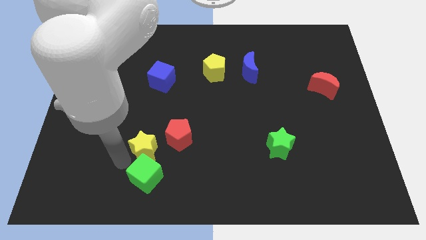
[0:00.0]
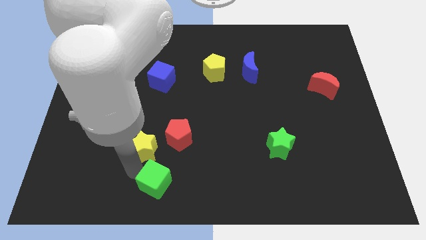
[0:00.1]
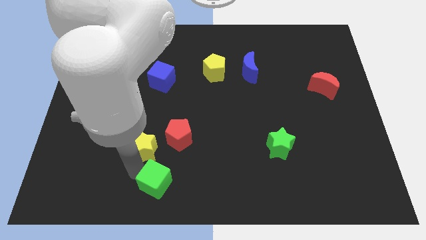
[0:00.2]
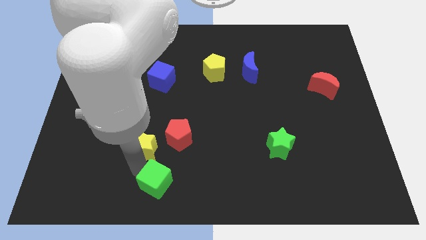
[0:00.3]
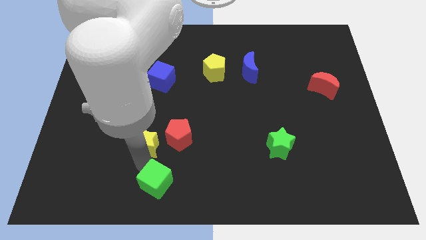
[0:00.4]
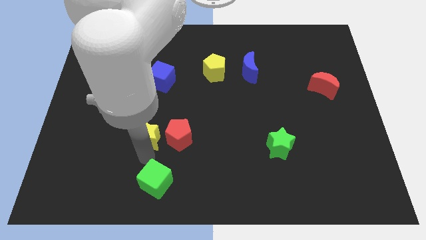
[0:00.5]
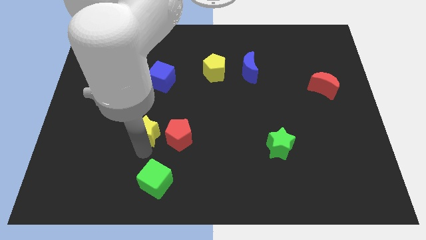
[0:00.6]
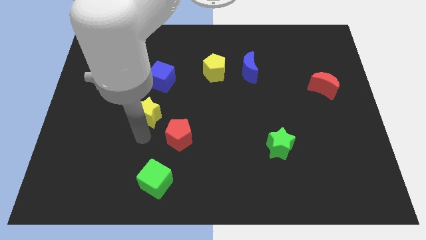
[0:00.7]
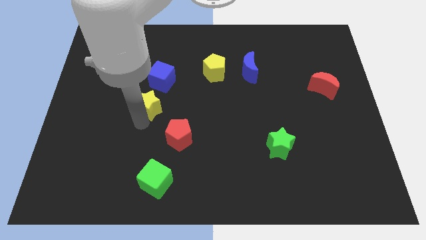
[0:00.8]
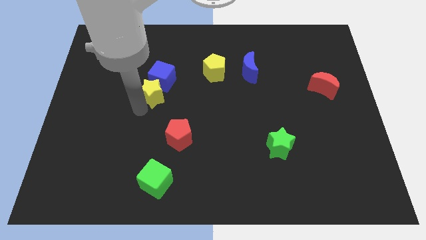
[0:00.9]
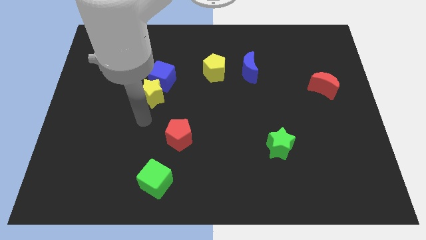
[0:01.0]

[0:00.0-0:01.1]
push the yellow star into the bottom of the blue cube

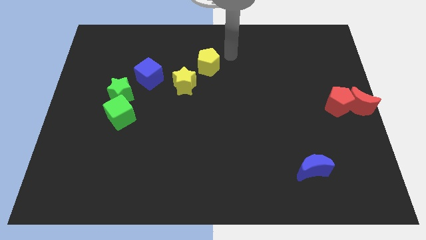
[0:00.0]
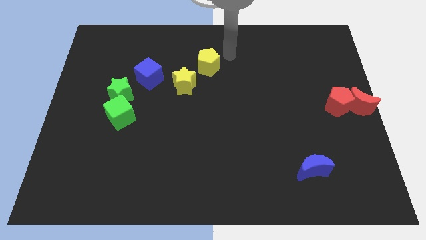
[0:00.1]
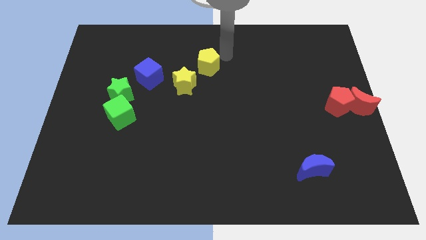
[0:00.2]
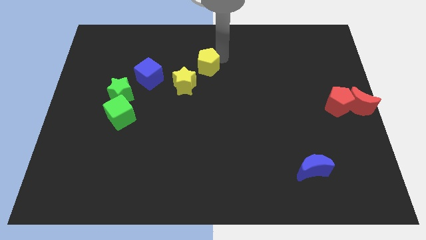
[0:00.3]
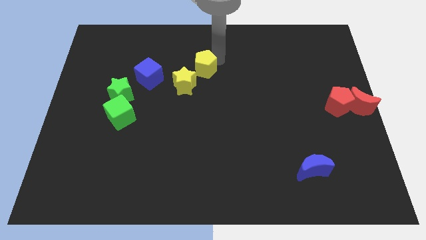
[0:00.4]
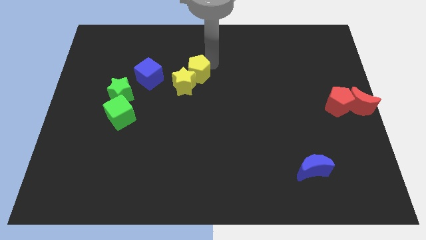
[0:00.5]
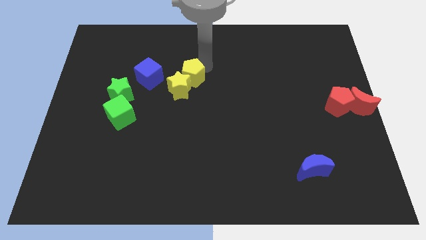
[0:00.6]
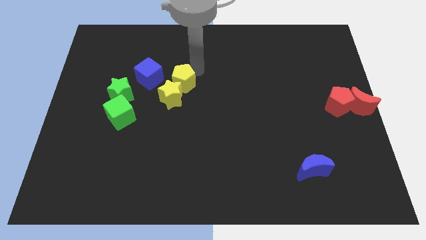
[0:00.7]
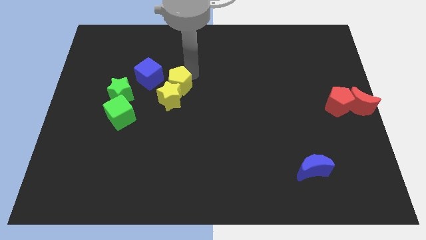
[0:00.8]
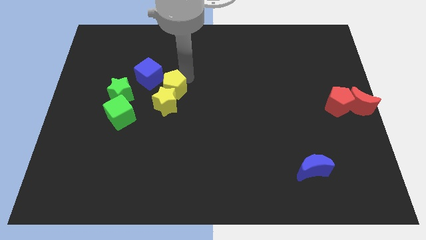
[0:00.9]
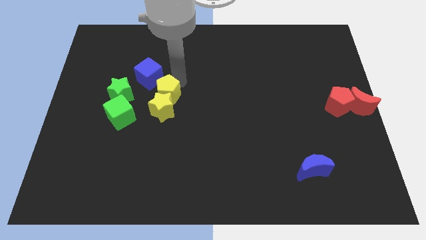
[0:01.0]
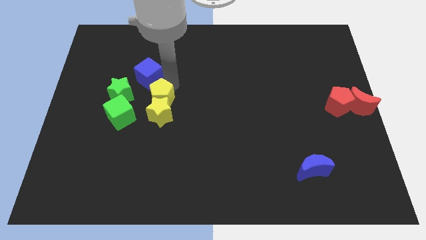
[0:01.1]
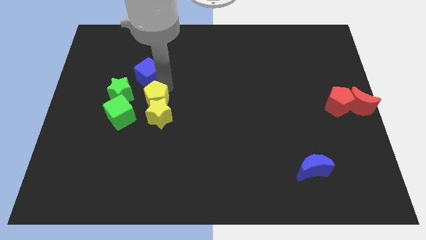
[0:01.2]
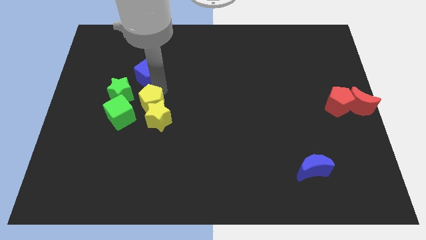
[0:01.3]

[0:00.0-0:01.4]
push the yellow blocks towards the bottom side

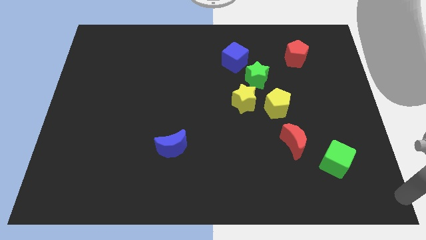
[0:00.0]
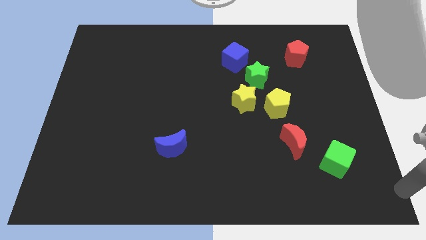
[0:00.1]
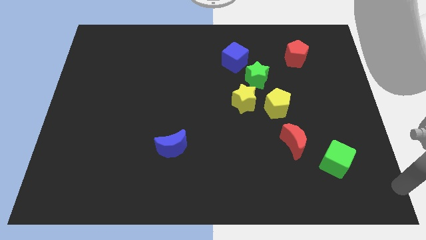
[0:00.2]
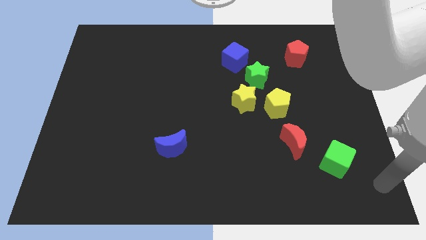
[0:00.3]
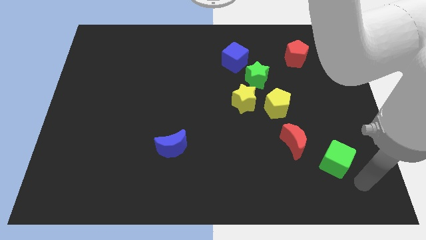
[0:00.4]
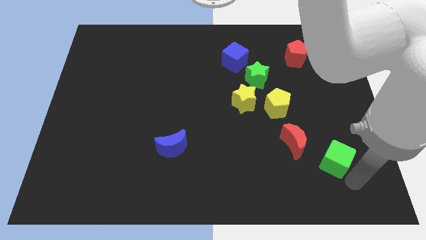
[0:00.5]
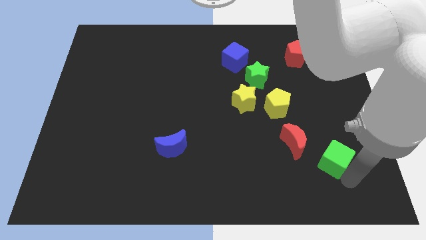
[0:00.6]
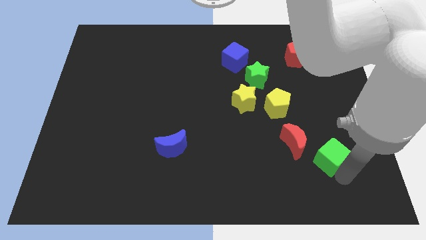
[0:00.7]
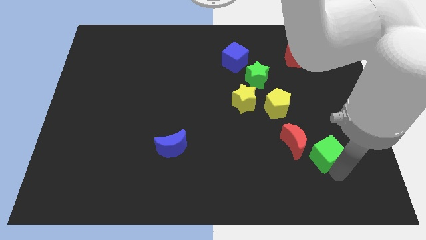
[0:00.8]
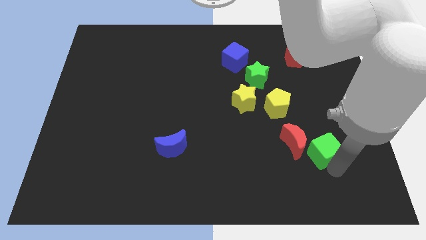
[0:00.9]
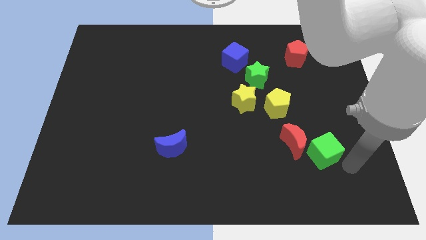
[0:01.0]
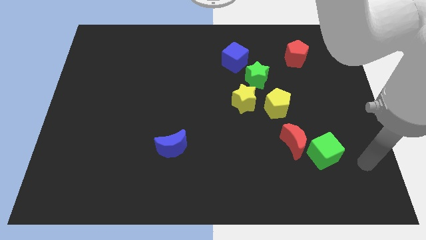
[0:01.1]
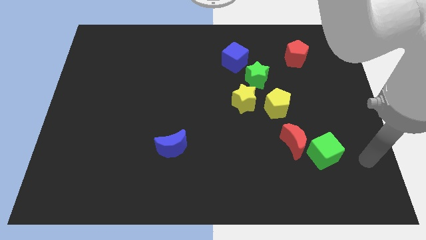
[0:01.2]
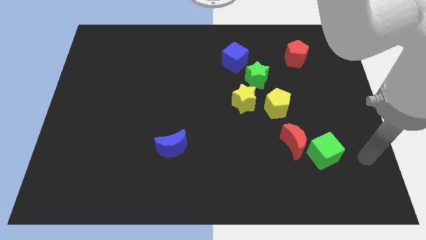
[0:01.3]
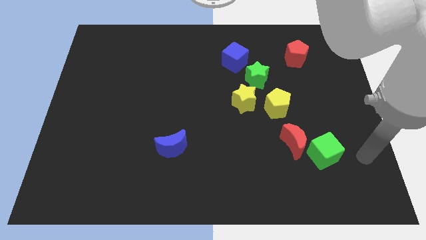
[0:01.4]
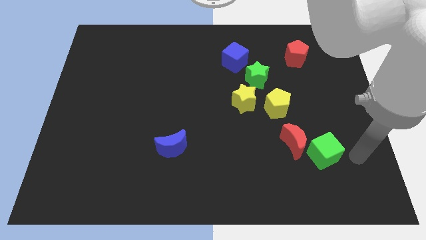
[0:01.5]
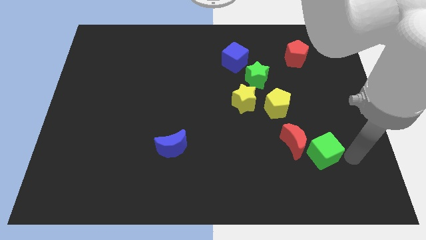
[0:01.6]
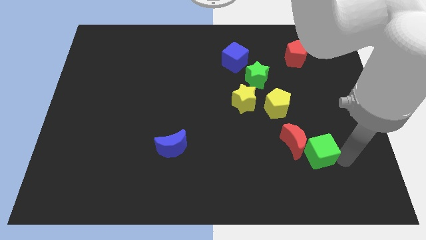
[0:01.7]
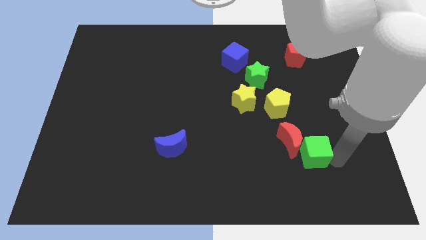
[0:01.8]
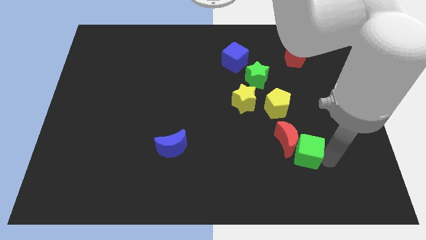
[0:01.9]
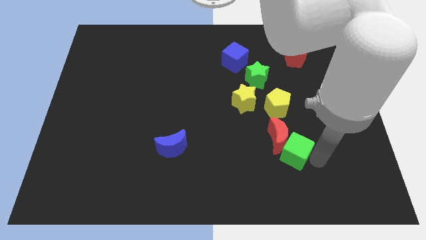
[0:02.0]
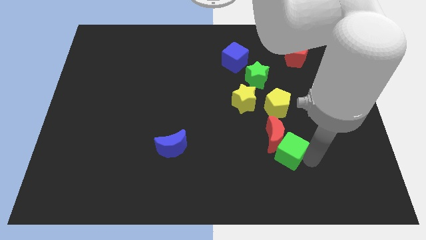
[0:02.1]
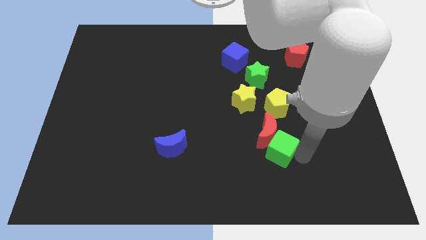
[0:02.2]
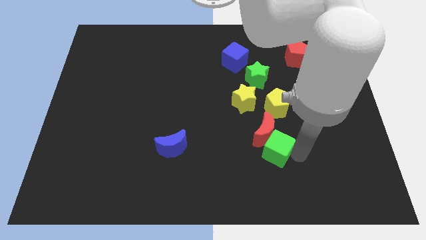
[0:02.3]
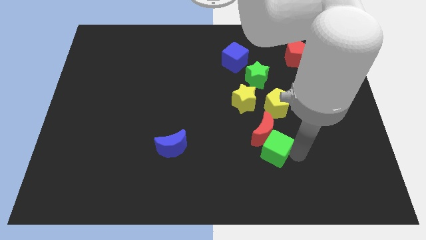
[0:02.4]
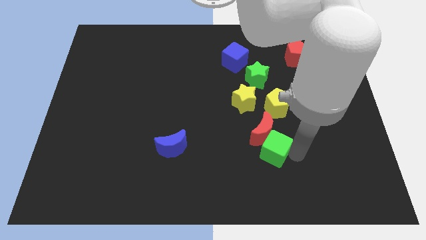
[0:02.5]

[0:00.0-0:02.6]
place the red moon and green cube under the yellow pentagon

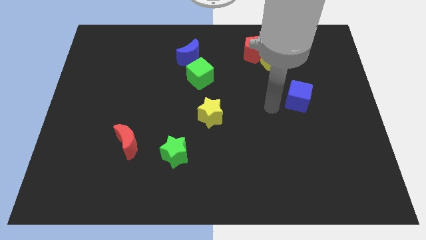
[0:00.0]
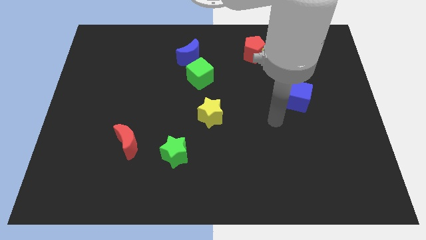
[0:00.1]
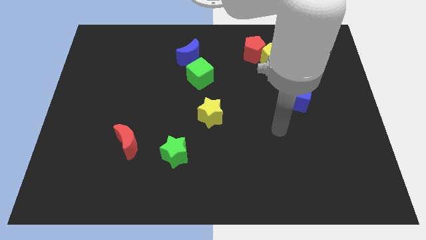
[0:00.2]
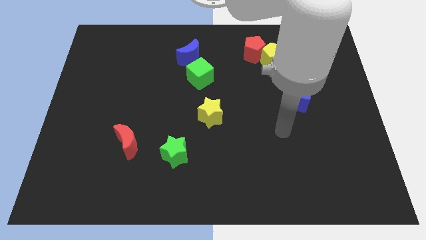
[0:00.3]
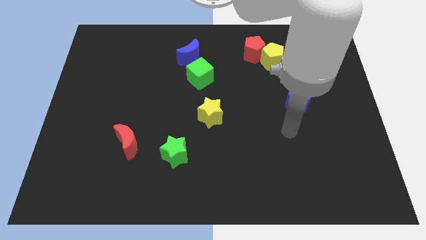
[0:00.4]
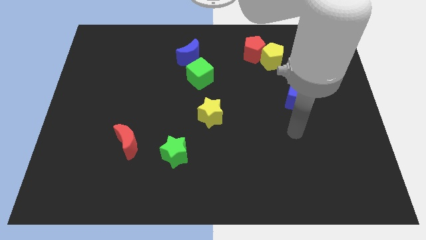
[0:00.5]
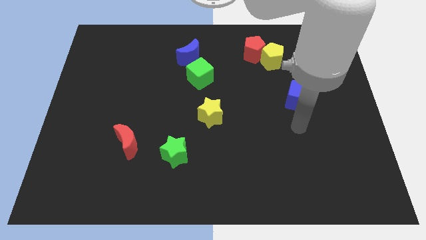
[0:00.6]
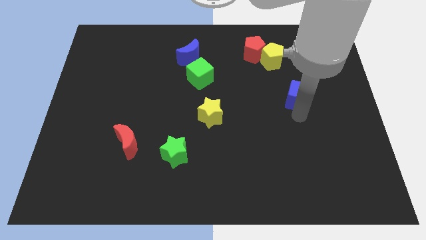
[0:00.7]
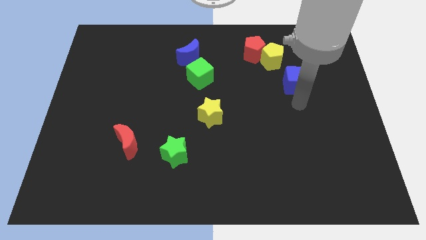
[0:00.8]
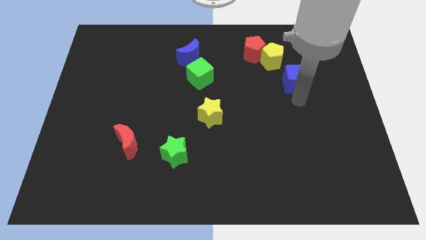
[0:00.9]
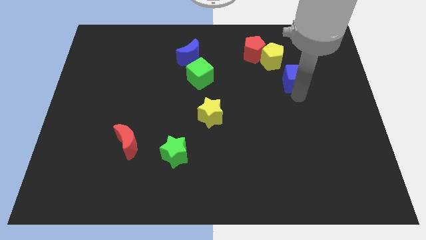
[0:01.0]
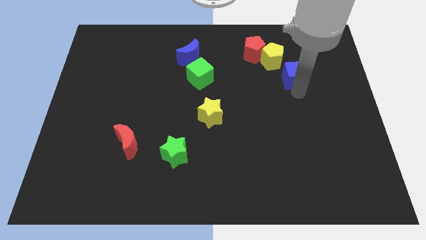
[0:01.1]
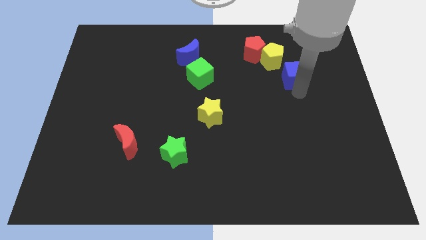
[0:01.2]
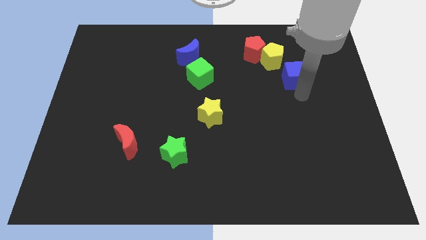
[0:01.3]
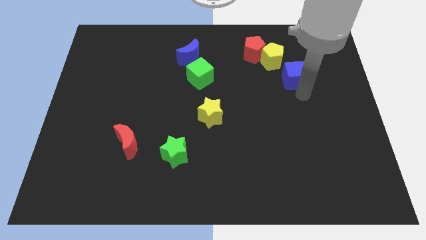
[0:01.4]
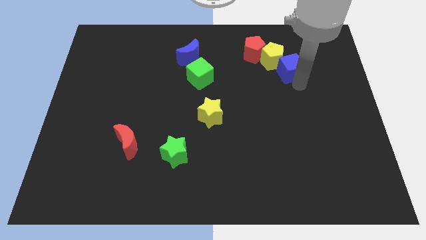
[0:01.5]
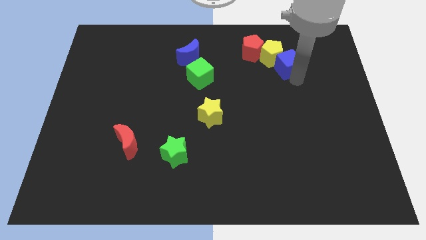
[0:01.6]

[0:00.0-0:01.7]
move the blue cube into the yellow pentagon

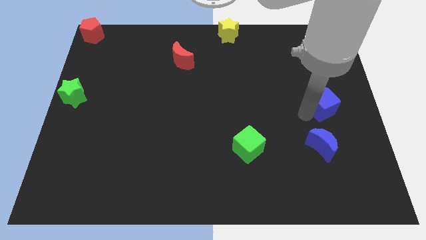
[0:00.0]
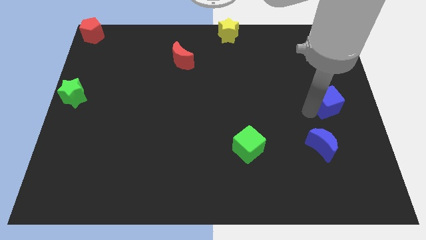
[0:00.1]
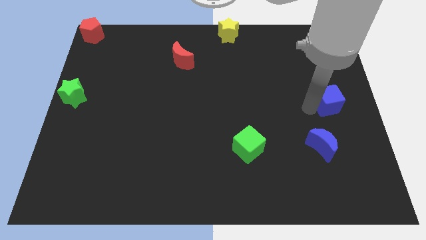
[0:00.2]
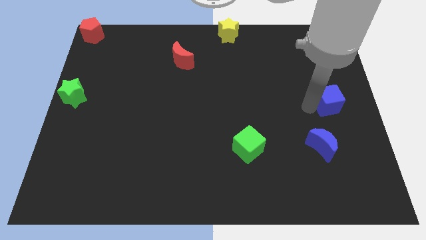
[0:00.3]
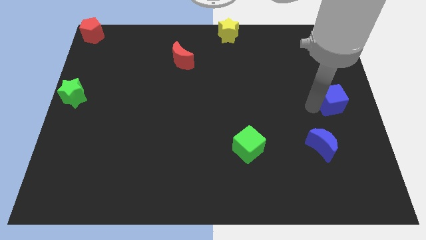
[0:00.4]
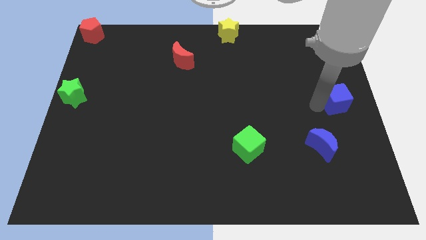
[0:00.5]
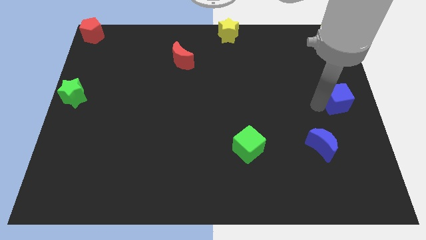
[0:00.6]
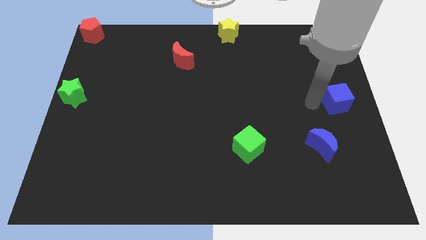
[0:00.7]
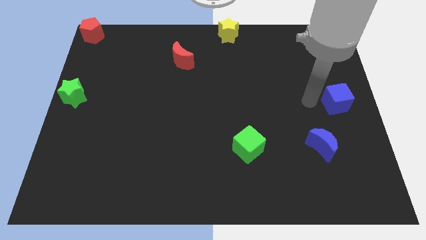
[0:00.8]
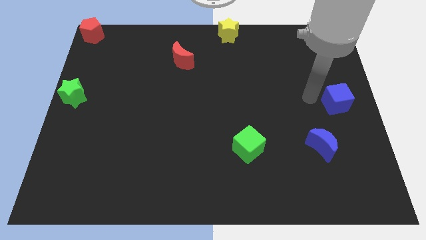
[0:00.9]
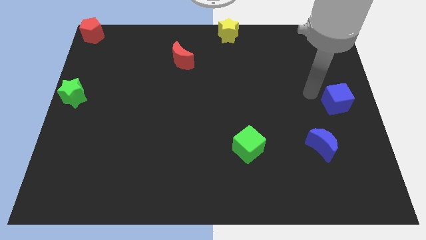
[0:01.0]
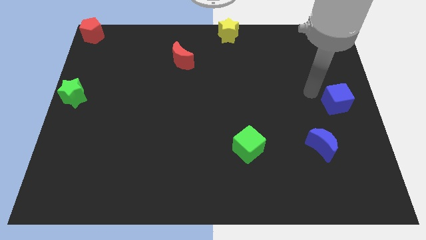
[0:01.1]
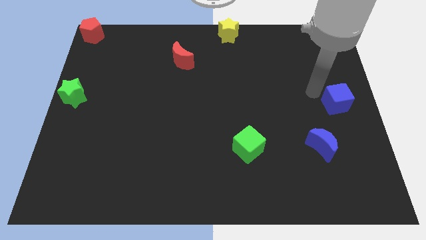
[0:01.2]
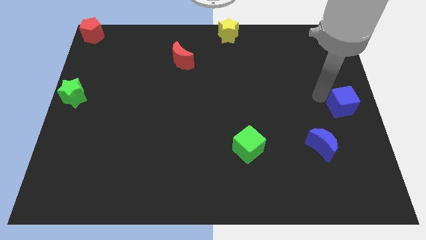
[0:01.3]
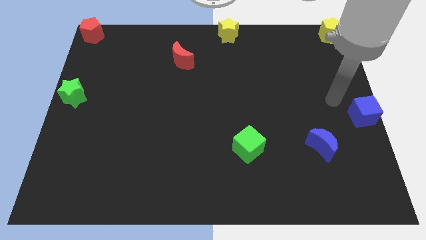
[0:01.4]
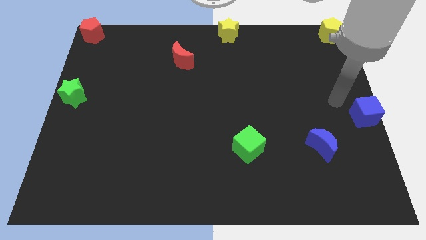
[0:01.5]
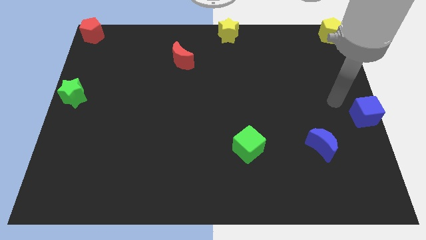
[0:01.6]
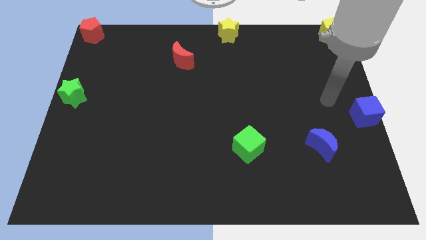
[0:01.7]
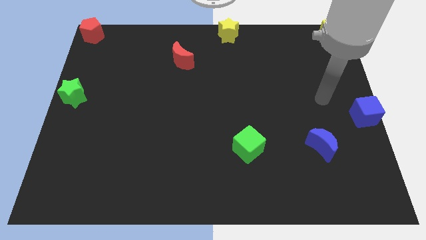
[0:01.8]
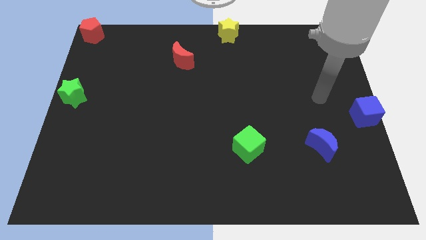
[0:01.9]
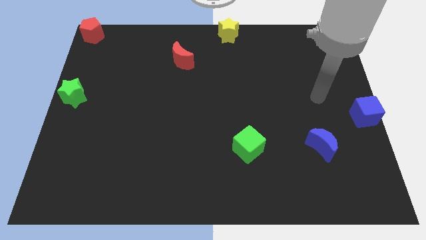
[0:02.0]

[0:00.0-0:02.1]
place blue cube to the center right of the board
